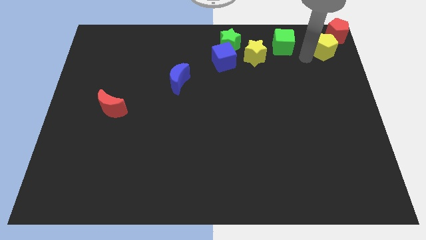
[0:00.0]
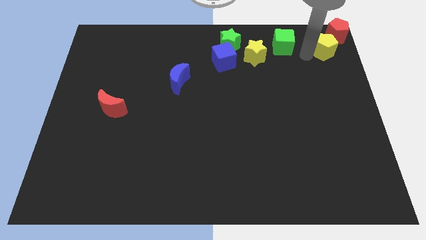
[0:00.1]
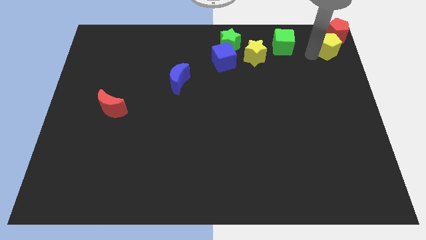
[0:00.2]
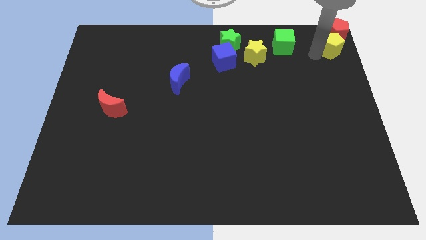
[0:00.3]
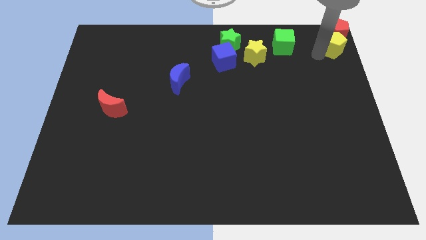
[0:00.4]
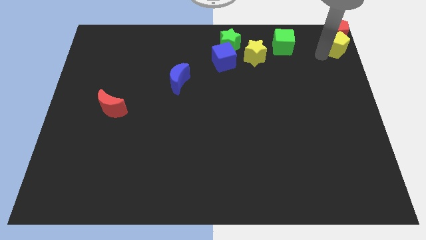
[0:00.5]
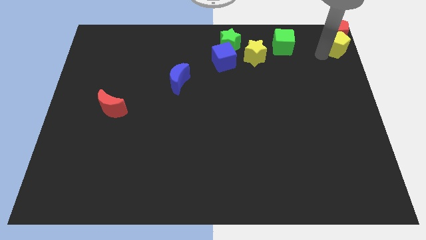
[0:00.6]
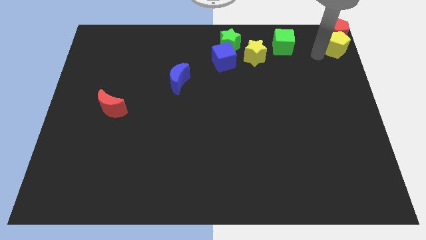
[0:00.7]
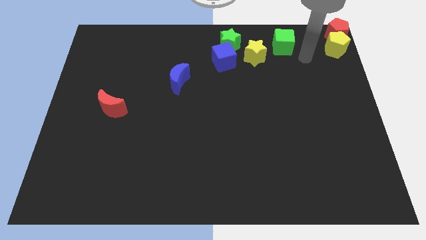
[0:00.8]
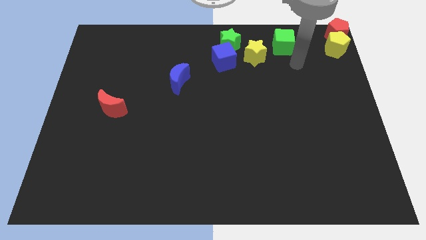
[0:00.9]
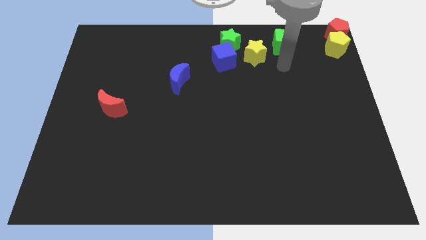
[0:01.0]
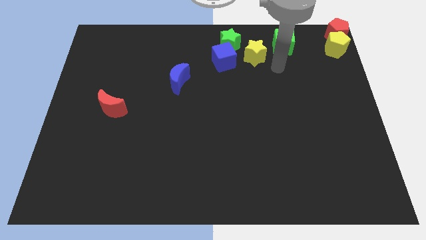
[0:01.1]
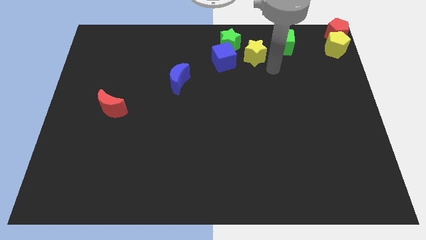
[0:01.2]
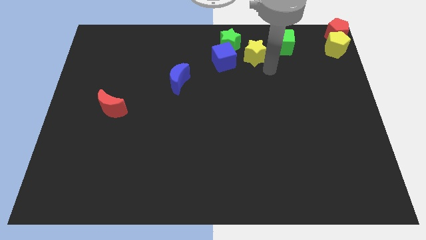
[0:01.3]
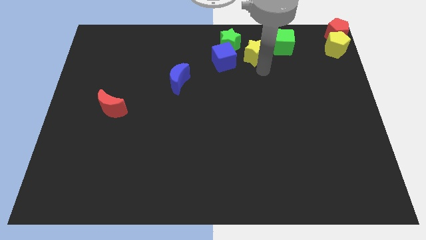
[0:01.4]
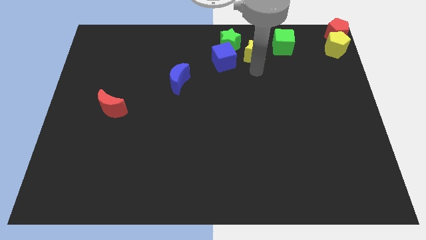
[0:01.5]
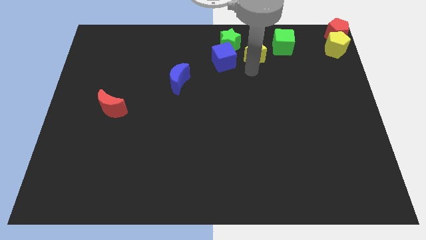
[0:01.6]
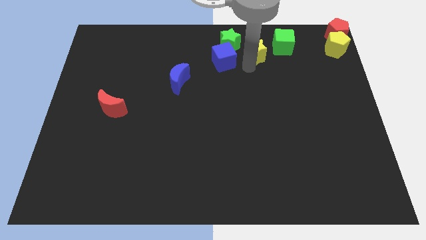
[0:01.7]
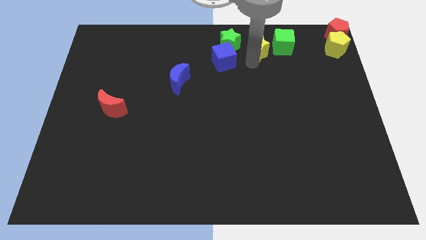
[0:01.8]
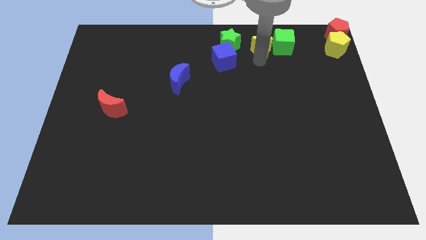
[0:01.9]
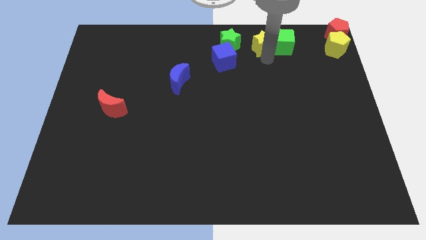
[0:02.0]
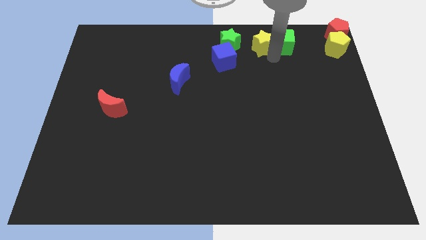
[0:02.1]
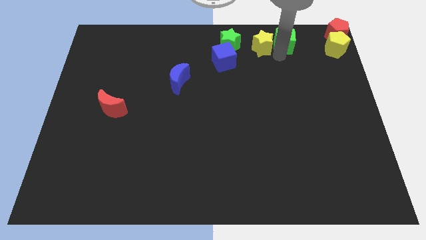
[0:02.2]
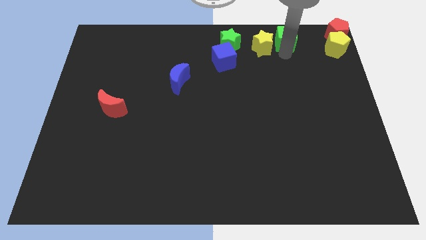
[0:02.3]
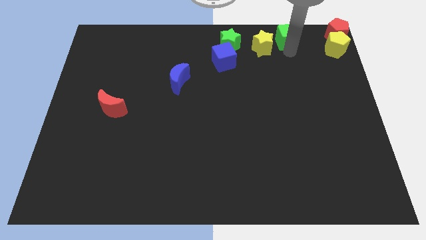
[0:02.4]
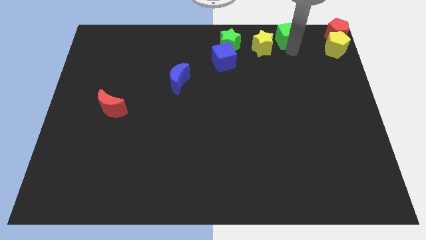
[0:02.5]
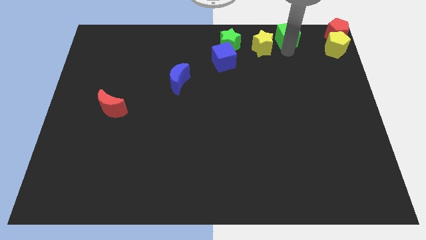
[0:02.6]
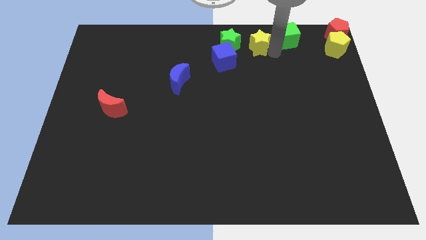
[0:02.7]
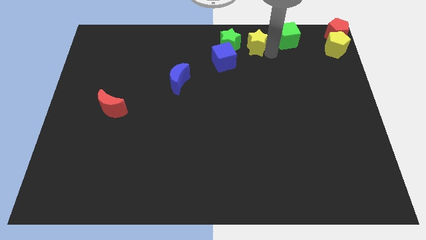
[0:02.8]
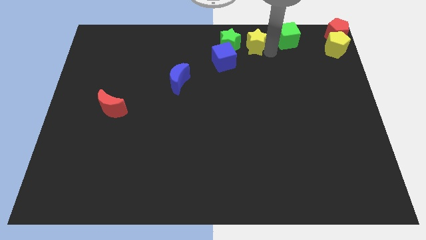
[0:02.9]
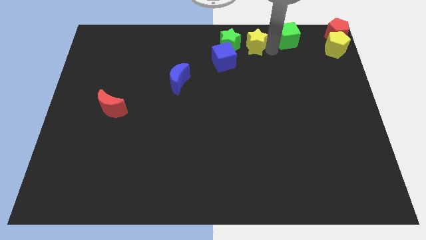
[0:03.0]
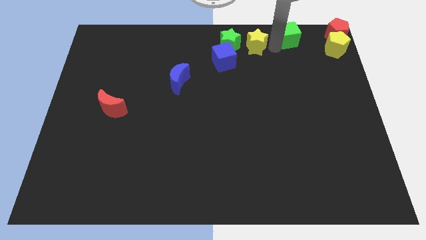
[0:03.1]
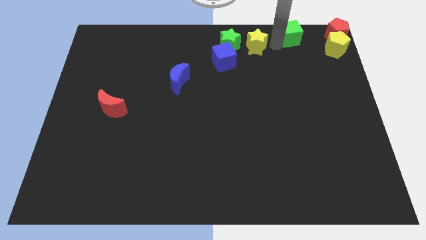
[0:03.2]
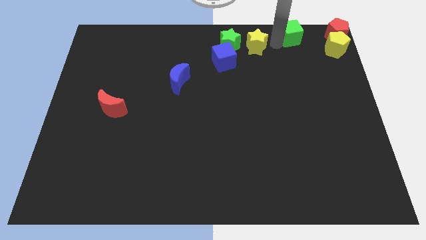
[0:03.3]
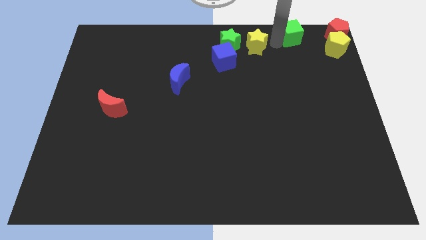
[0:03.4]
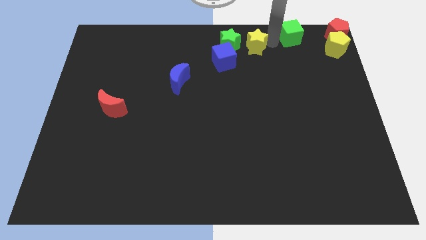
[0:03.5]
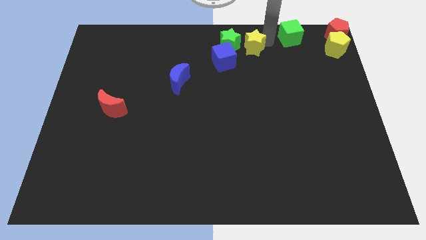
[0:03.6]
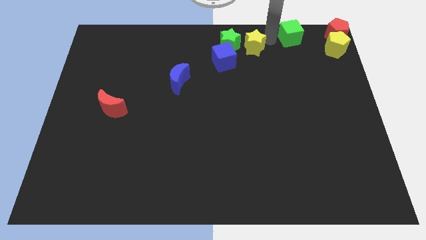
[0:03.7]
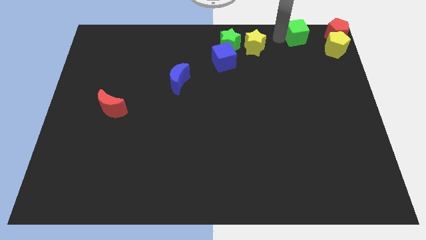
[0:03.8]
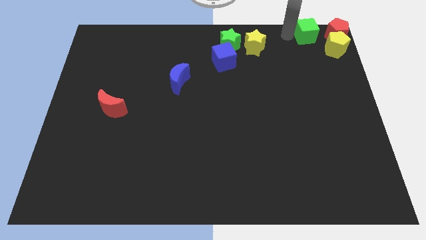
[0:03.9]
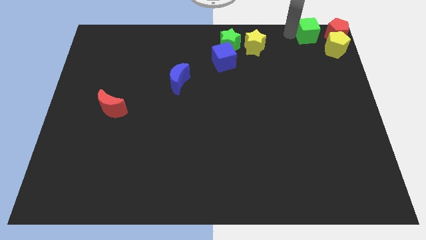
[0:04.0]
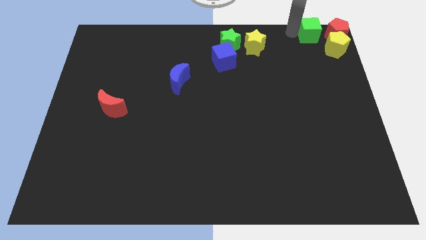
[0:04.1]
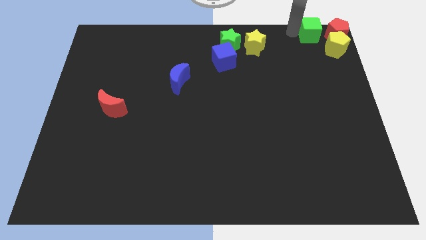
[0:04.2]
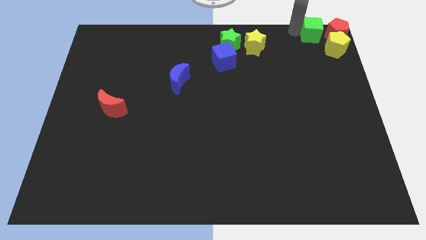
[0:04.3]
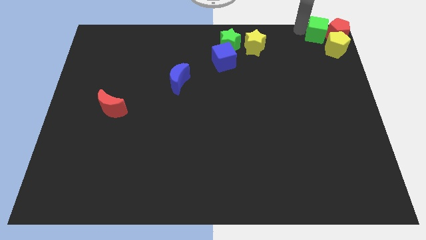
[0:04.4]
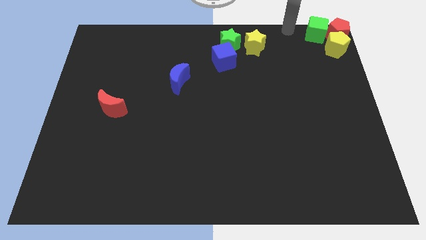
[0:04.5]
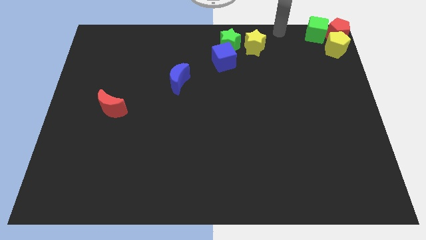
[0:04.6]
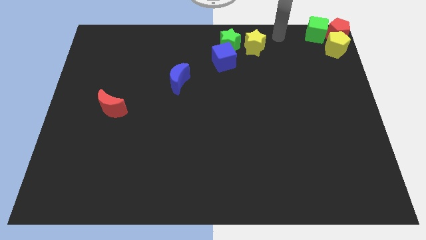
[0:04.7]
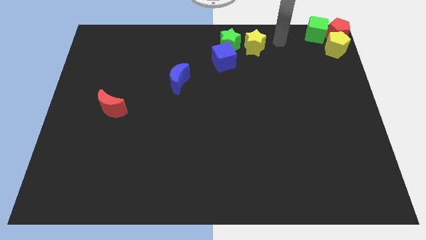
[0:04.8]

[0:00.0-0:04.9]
move the green cube left beside the red pentagon

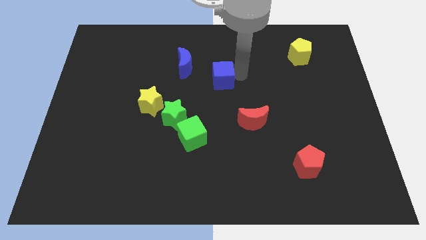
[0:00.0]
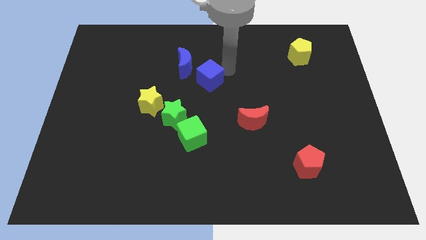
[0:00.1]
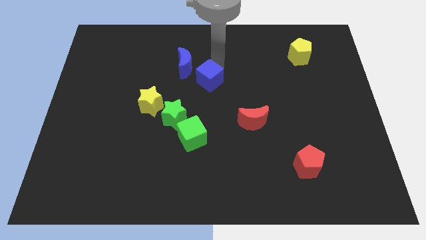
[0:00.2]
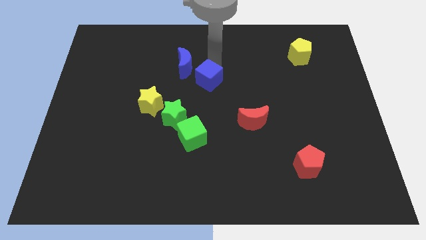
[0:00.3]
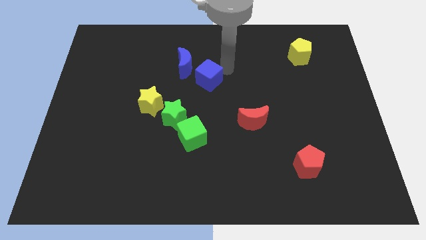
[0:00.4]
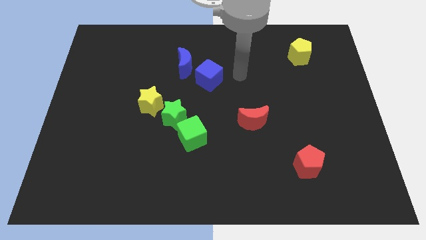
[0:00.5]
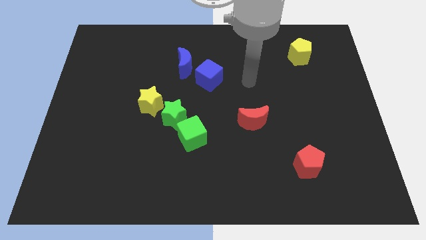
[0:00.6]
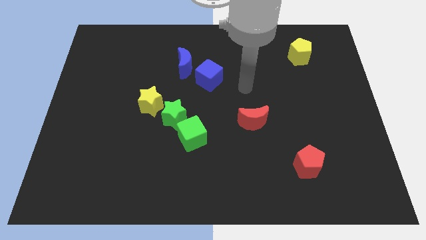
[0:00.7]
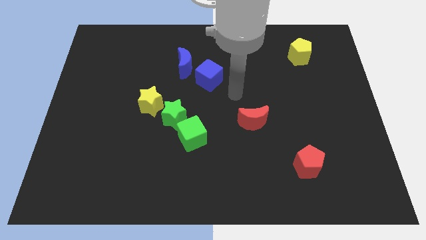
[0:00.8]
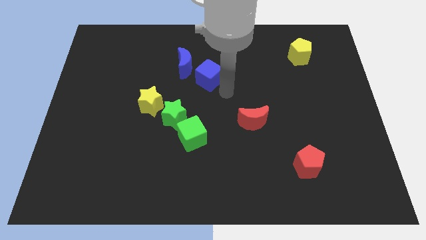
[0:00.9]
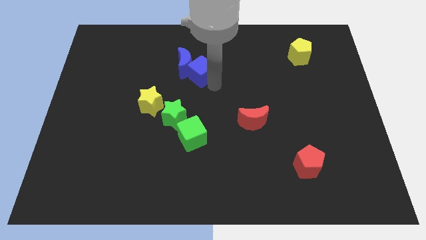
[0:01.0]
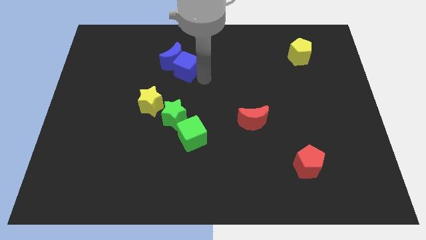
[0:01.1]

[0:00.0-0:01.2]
move the blue cube into the blue crescent

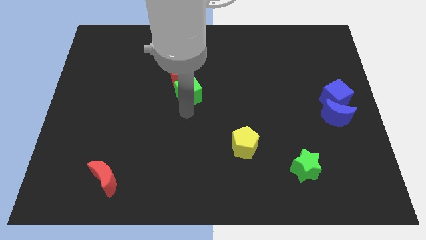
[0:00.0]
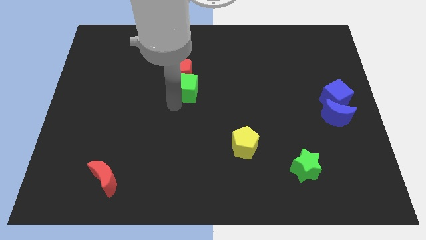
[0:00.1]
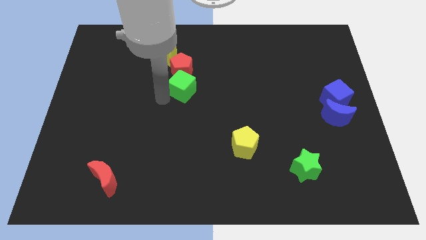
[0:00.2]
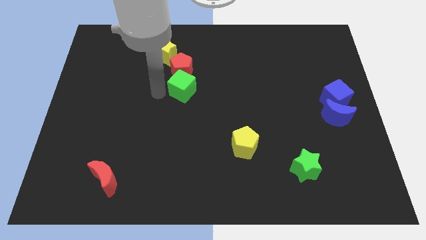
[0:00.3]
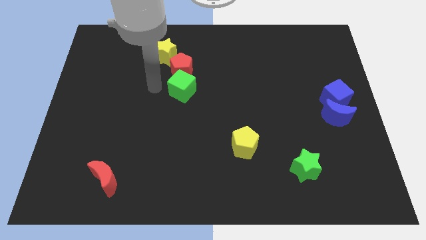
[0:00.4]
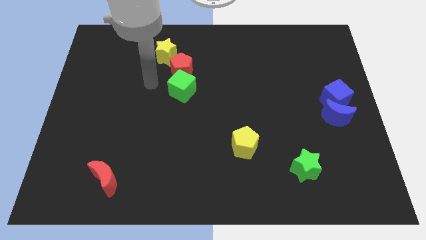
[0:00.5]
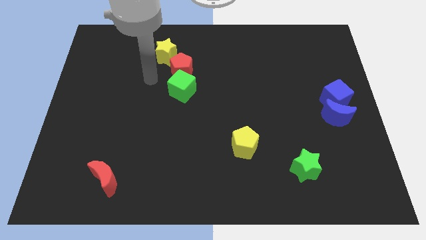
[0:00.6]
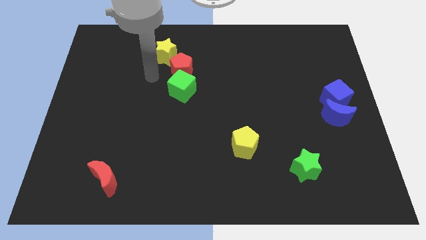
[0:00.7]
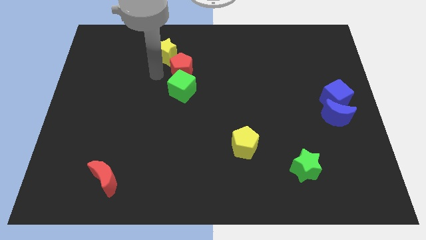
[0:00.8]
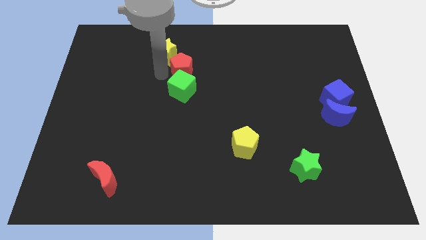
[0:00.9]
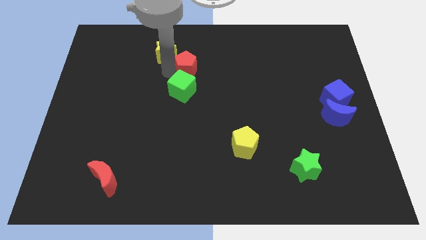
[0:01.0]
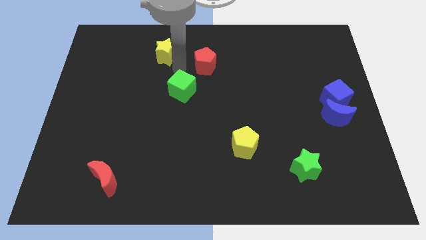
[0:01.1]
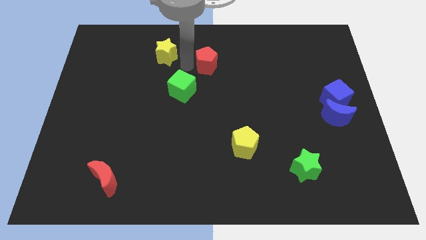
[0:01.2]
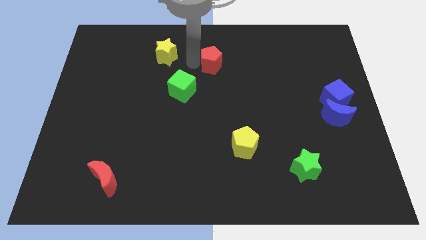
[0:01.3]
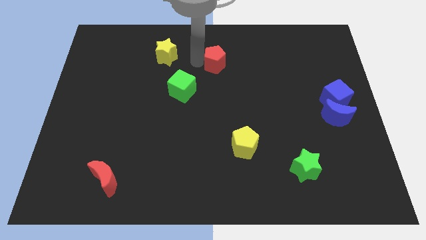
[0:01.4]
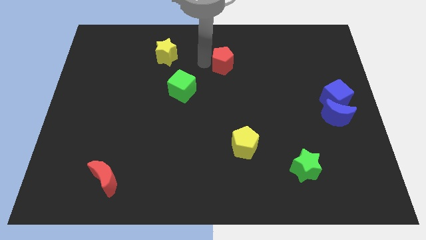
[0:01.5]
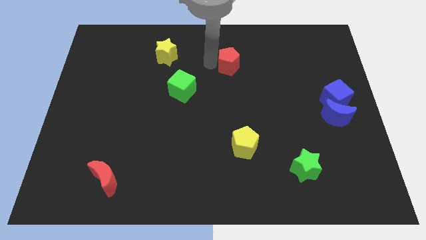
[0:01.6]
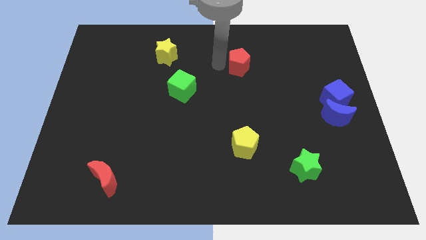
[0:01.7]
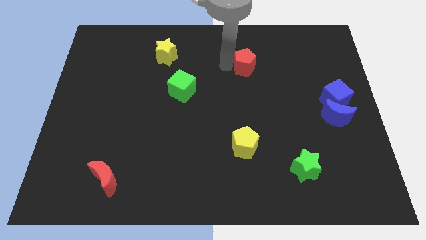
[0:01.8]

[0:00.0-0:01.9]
move the red pentagon to the right of the board

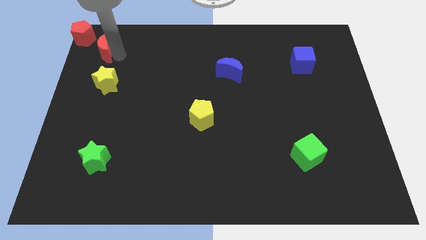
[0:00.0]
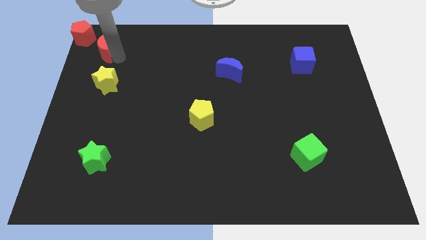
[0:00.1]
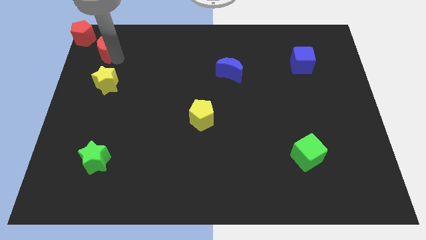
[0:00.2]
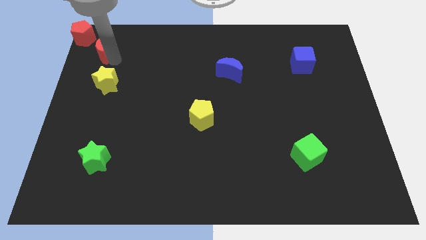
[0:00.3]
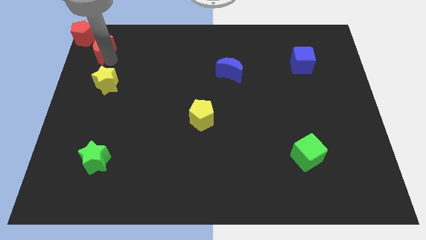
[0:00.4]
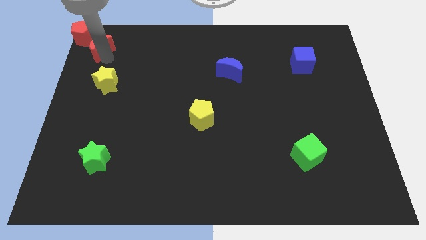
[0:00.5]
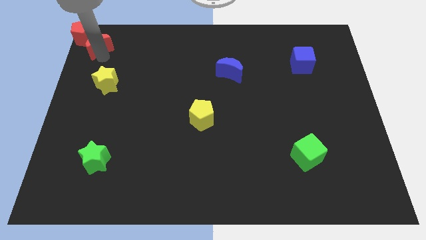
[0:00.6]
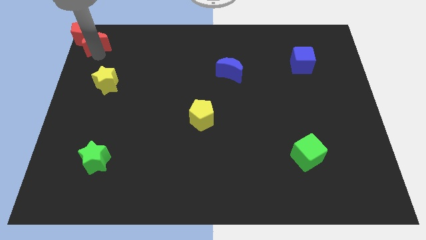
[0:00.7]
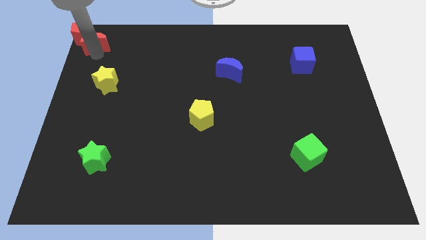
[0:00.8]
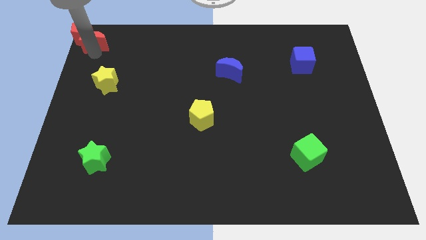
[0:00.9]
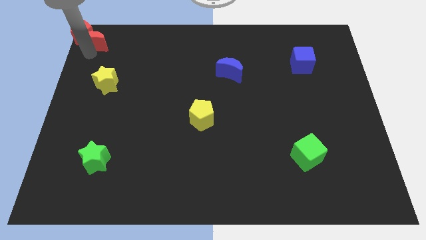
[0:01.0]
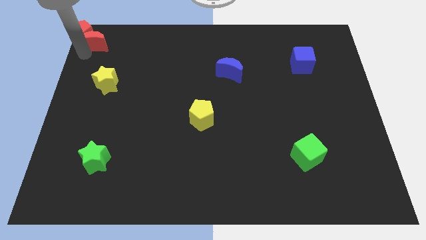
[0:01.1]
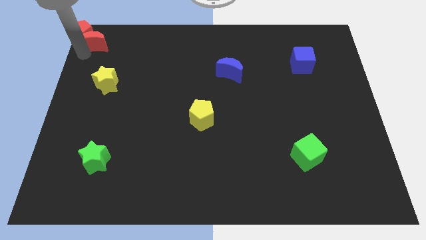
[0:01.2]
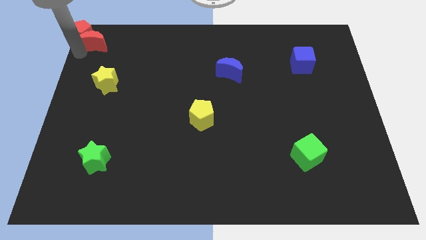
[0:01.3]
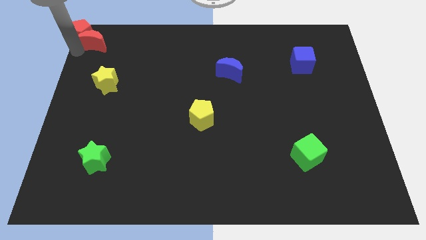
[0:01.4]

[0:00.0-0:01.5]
attach the red moon to the red pentagon
